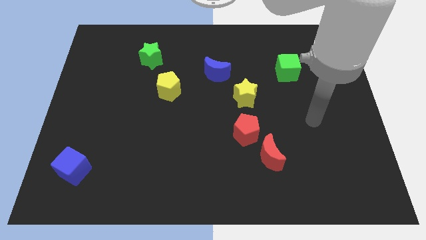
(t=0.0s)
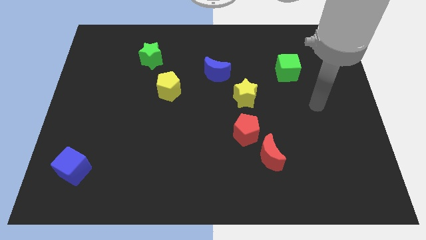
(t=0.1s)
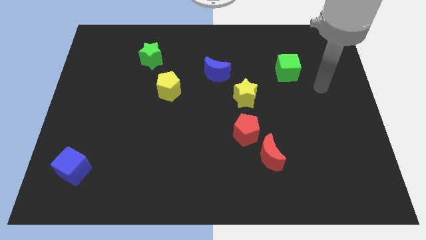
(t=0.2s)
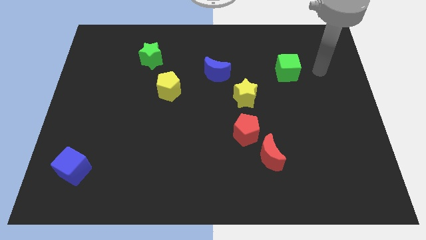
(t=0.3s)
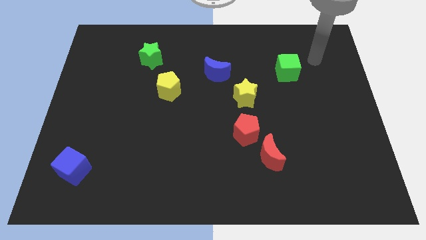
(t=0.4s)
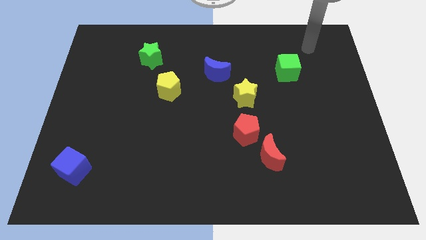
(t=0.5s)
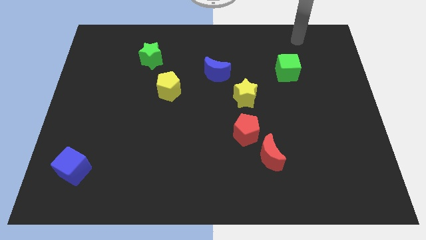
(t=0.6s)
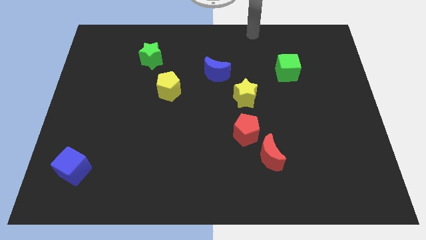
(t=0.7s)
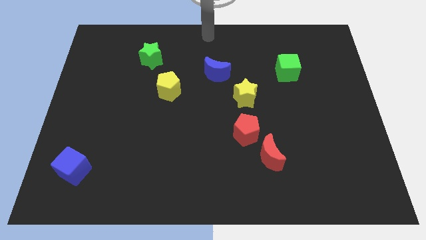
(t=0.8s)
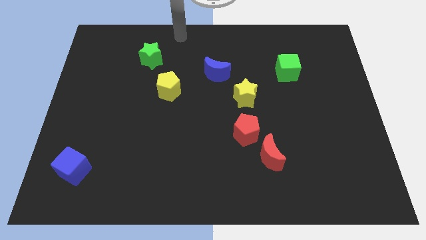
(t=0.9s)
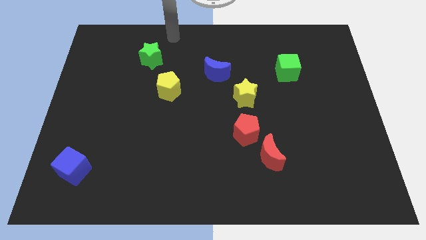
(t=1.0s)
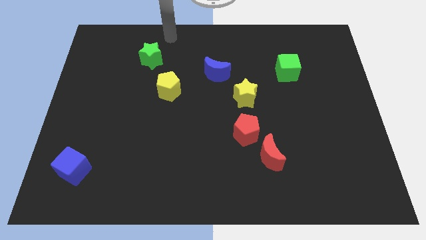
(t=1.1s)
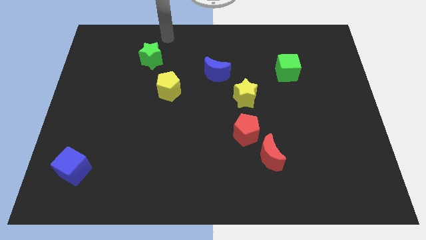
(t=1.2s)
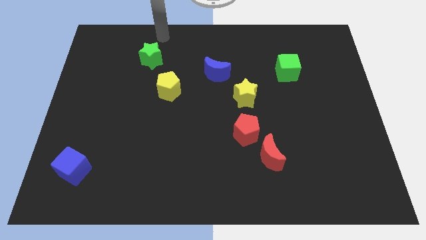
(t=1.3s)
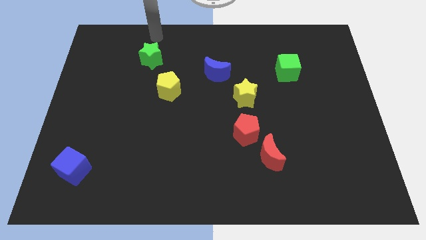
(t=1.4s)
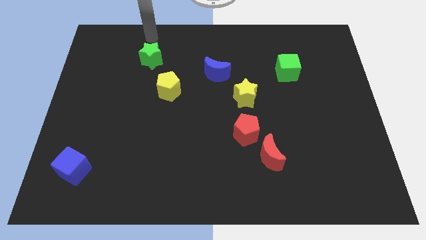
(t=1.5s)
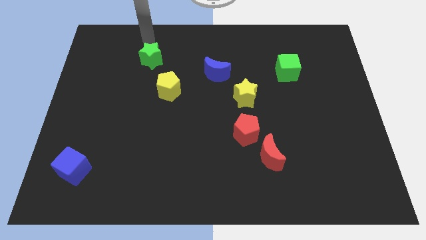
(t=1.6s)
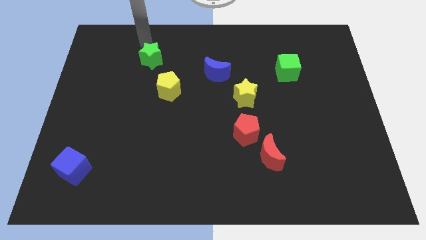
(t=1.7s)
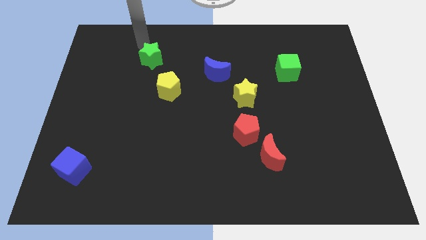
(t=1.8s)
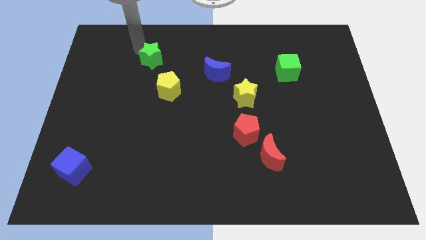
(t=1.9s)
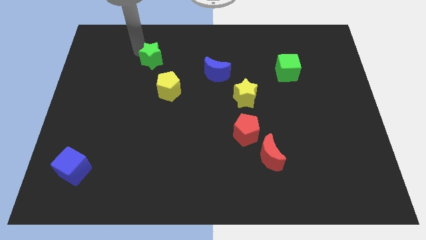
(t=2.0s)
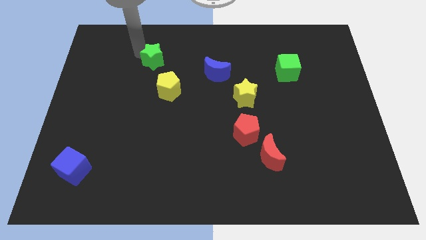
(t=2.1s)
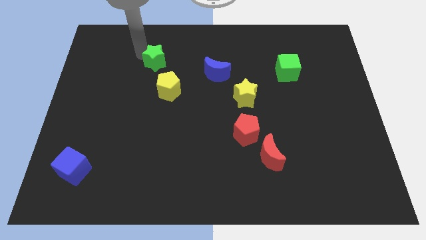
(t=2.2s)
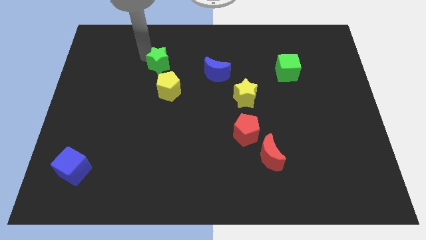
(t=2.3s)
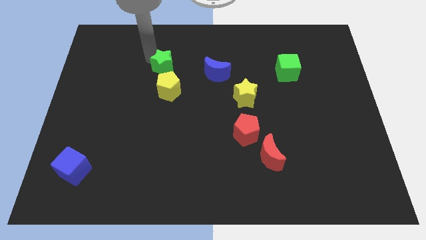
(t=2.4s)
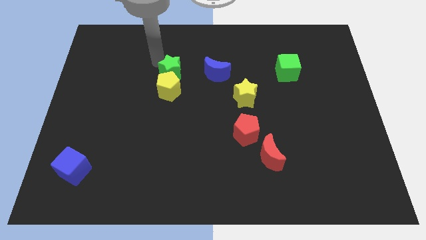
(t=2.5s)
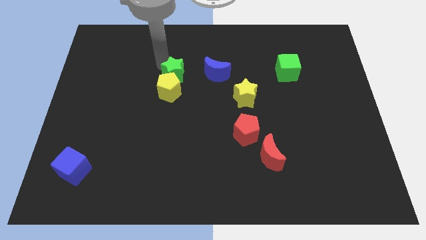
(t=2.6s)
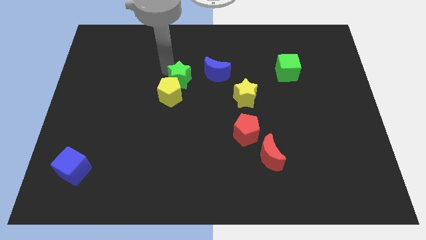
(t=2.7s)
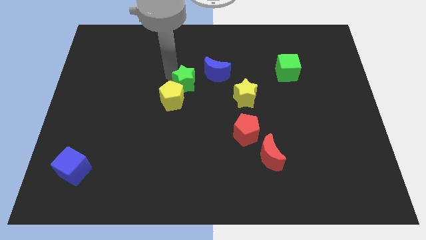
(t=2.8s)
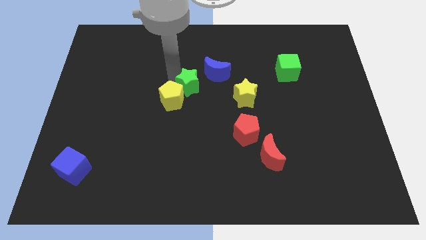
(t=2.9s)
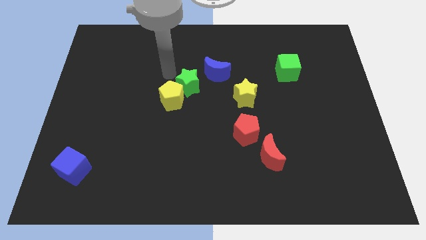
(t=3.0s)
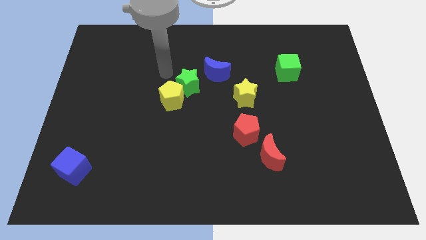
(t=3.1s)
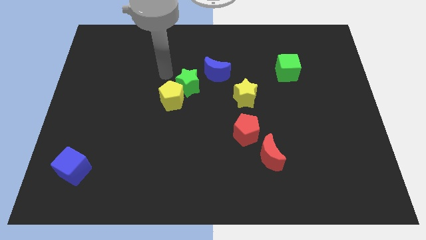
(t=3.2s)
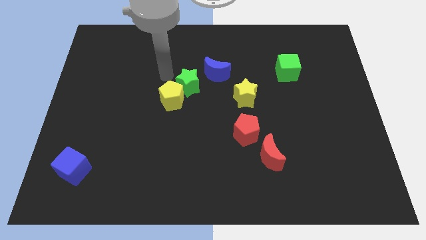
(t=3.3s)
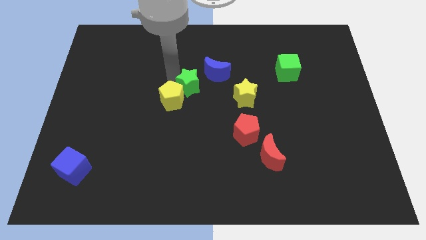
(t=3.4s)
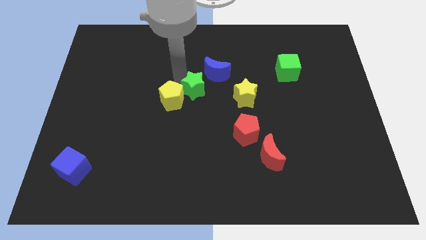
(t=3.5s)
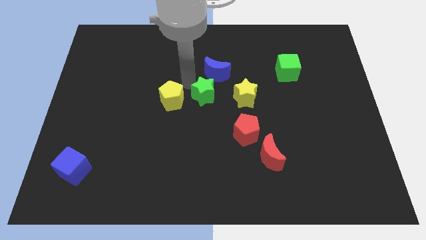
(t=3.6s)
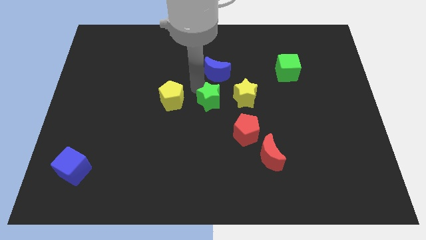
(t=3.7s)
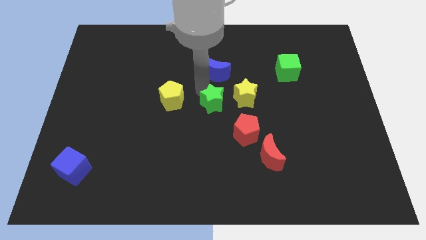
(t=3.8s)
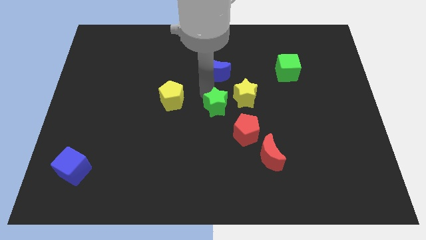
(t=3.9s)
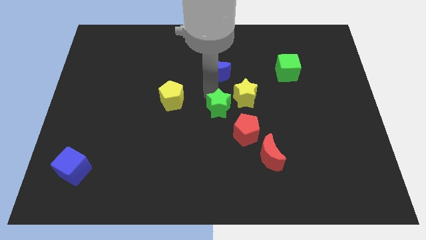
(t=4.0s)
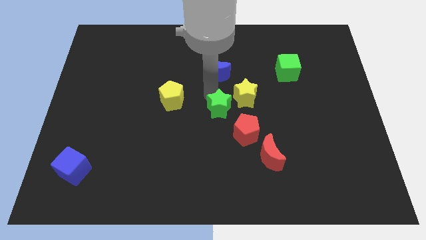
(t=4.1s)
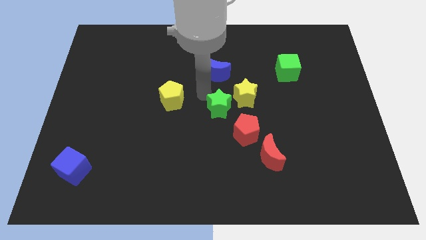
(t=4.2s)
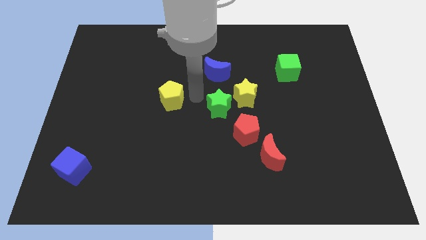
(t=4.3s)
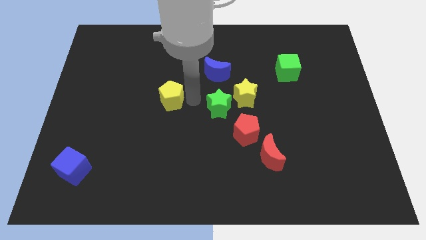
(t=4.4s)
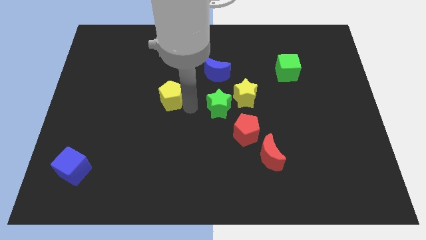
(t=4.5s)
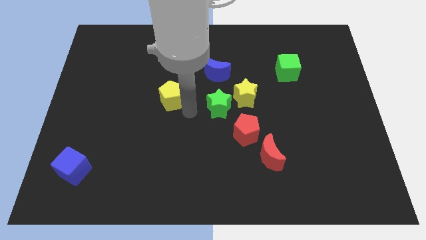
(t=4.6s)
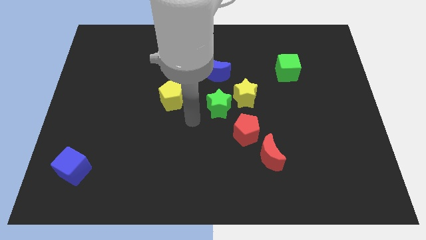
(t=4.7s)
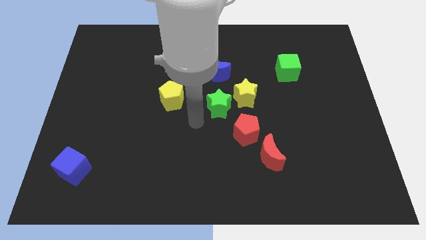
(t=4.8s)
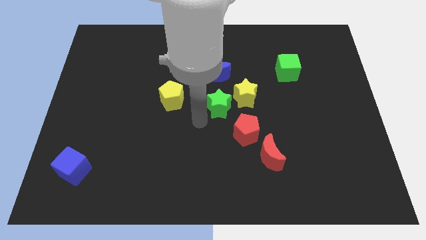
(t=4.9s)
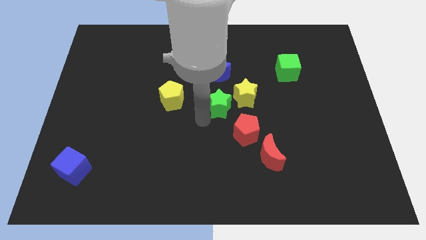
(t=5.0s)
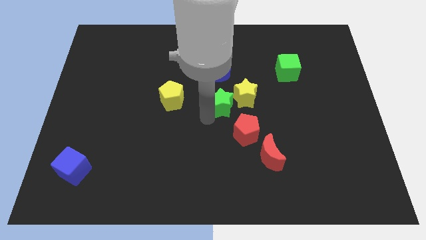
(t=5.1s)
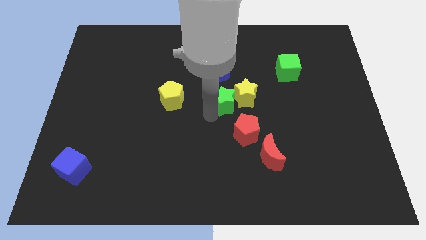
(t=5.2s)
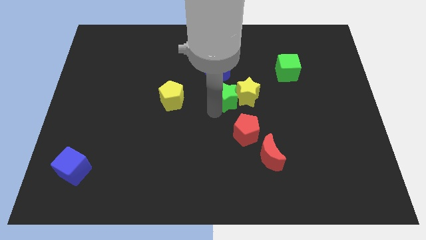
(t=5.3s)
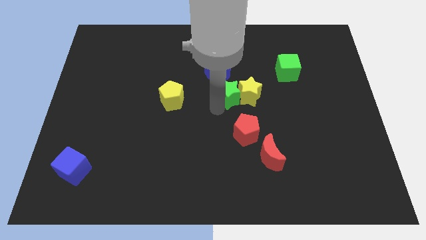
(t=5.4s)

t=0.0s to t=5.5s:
push the green star close to the yellow star

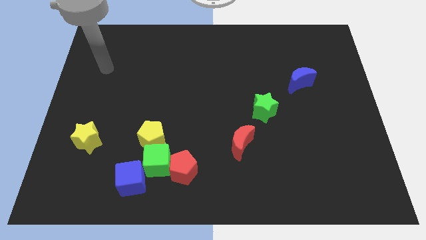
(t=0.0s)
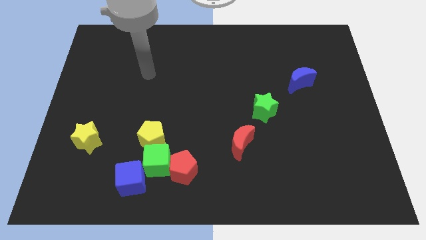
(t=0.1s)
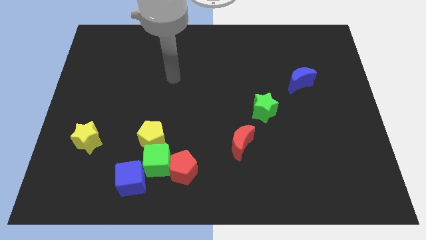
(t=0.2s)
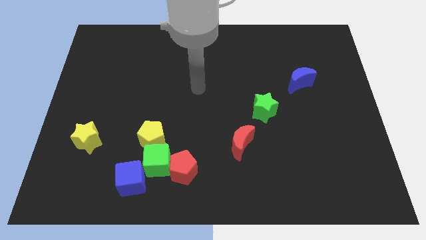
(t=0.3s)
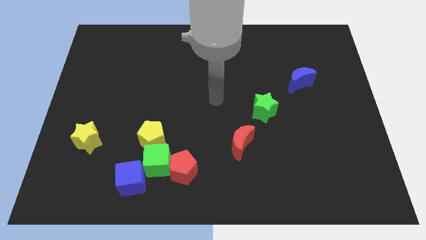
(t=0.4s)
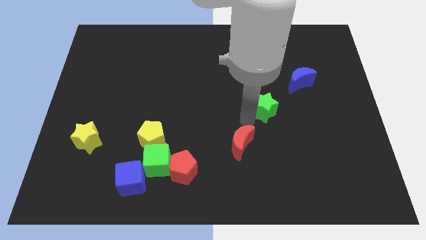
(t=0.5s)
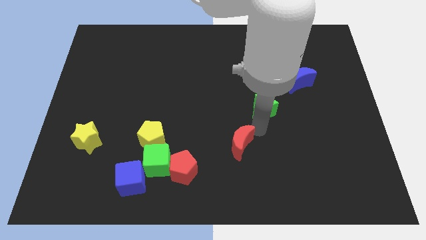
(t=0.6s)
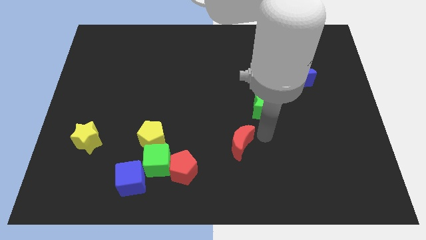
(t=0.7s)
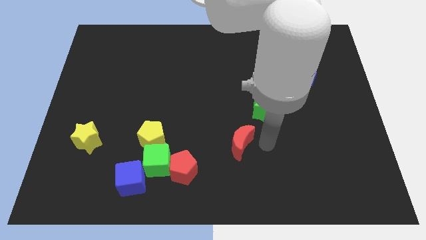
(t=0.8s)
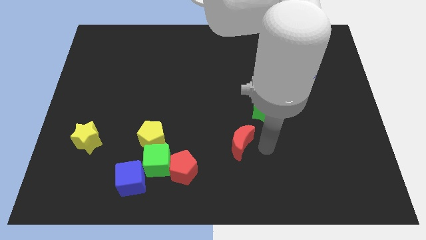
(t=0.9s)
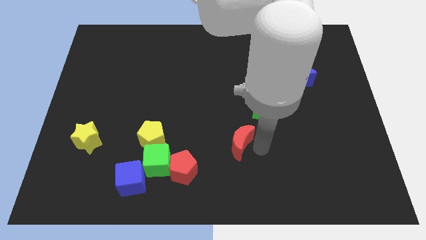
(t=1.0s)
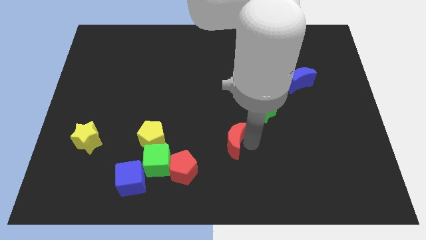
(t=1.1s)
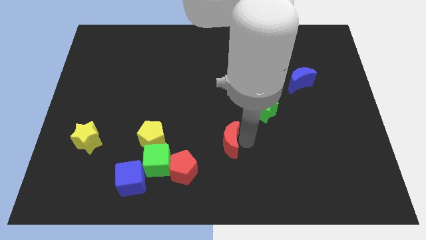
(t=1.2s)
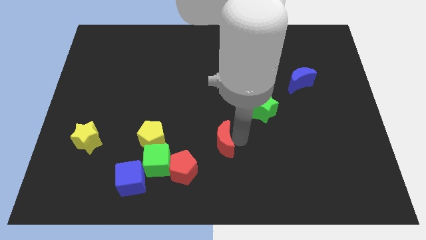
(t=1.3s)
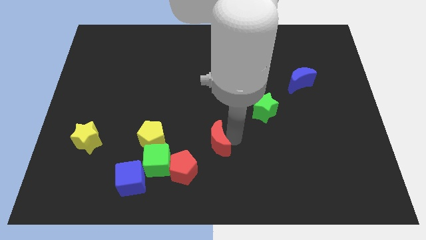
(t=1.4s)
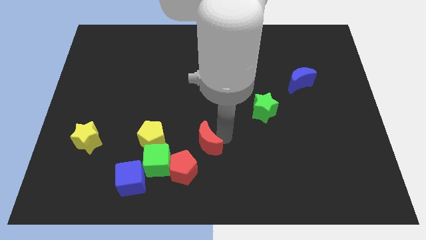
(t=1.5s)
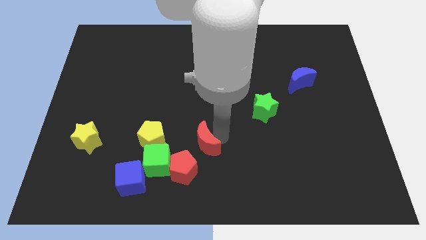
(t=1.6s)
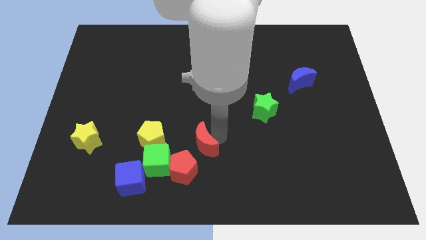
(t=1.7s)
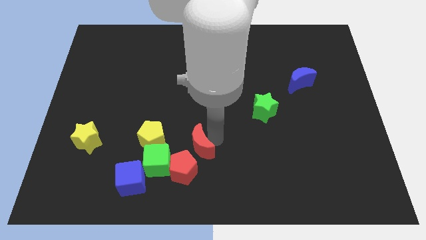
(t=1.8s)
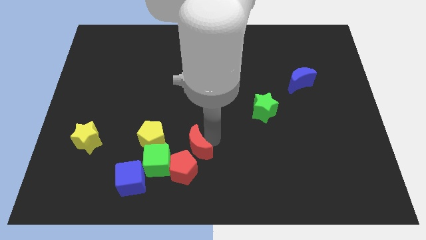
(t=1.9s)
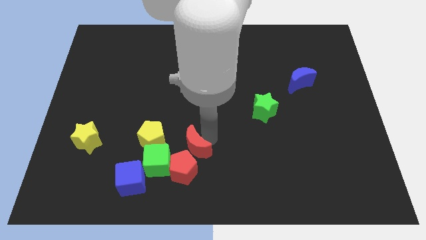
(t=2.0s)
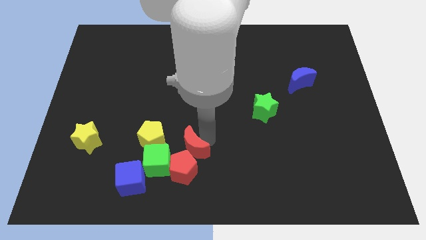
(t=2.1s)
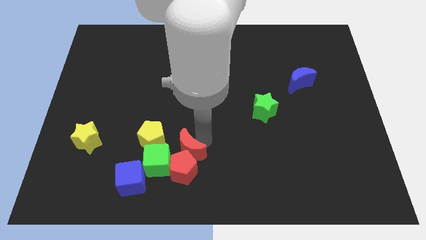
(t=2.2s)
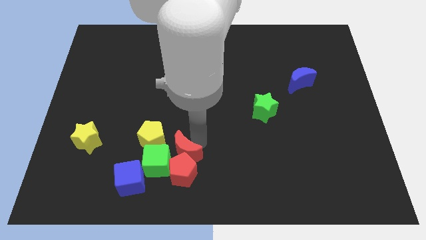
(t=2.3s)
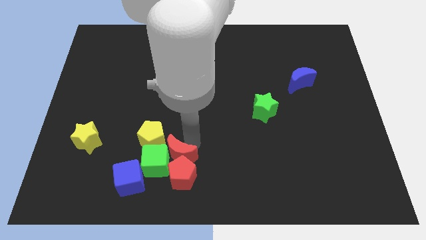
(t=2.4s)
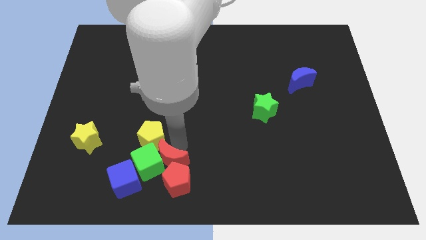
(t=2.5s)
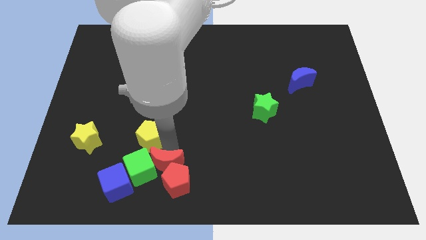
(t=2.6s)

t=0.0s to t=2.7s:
put the red moon next to the green cube
